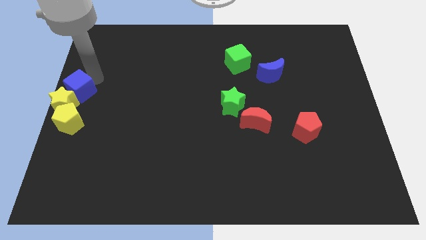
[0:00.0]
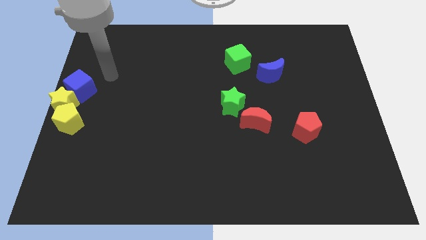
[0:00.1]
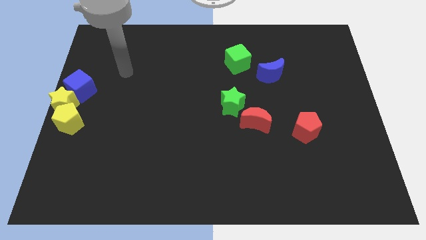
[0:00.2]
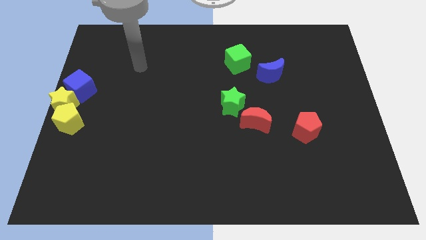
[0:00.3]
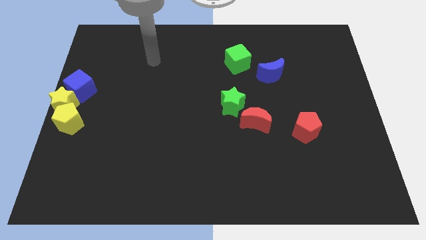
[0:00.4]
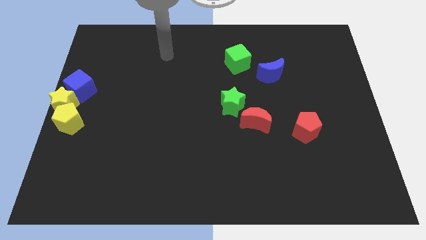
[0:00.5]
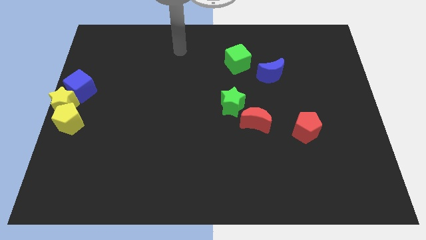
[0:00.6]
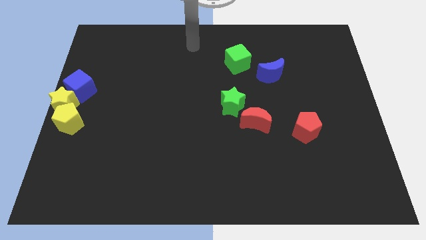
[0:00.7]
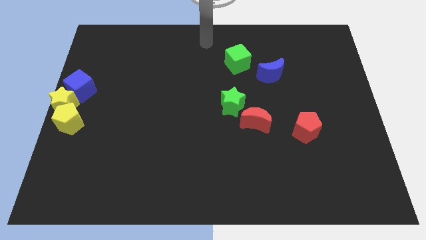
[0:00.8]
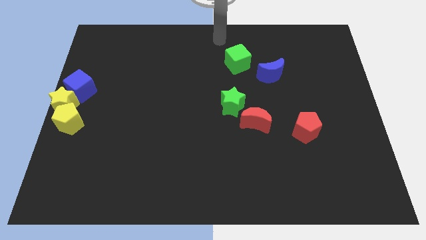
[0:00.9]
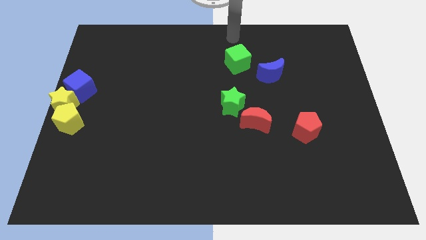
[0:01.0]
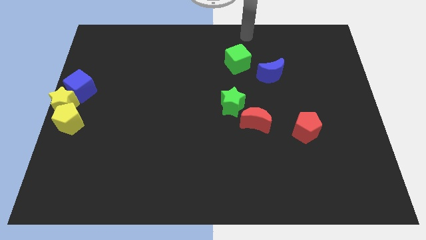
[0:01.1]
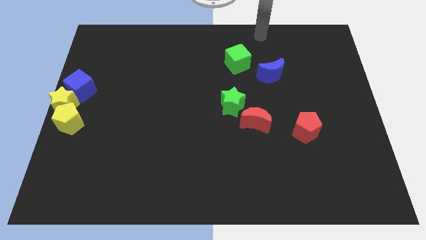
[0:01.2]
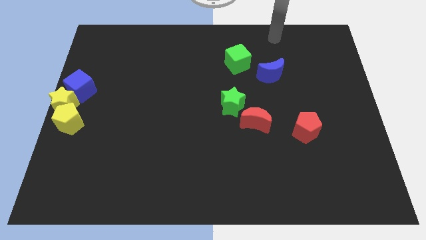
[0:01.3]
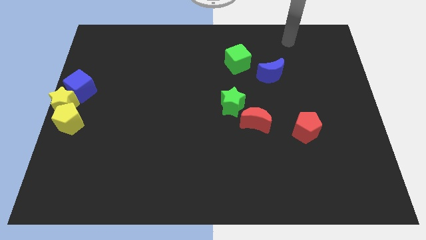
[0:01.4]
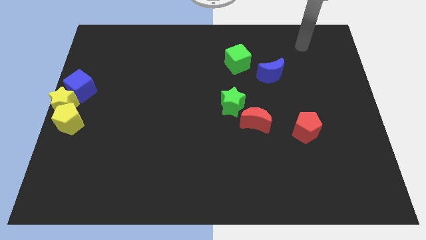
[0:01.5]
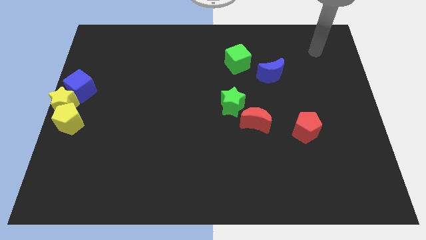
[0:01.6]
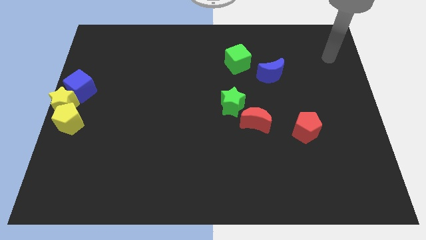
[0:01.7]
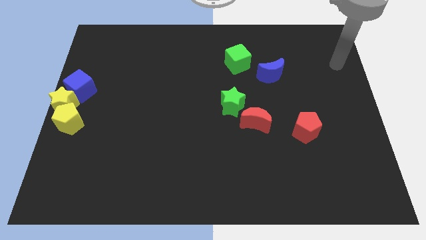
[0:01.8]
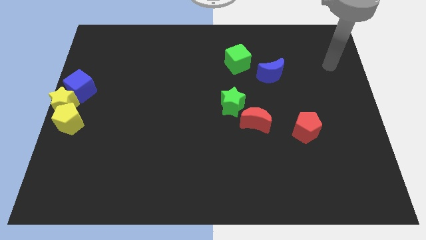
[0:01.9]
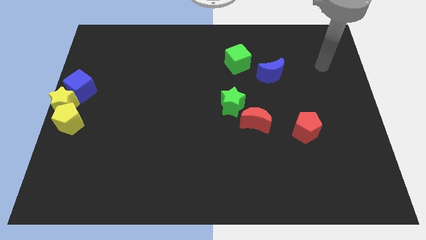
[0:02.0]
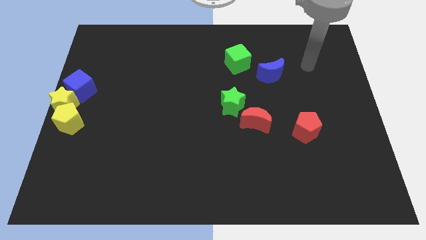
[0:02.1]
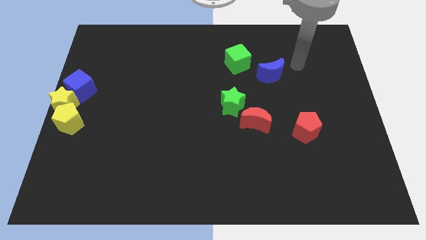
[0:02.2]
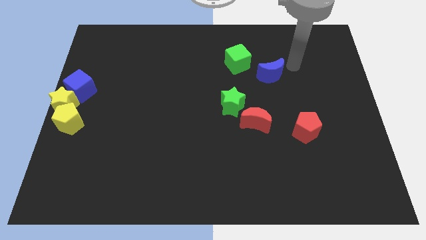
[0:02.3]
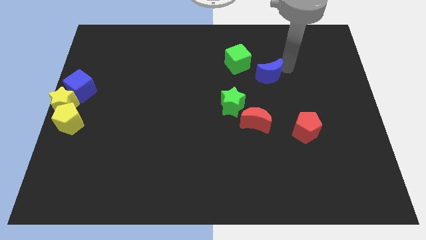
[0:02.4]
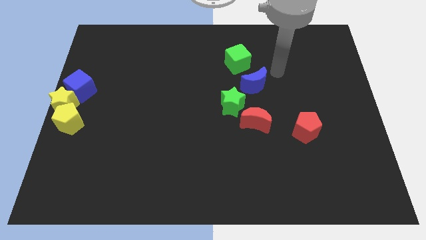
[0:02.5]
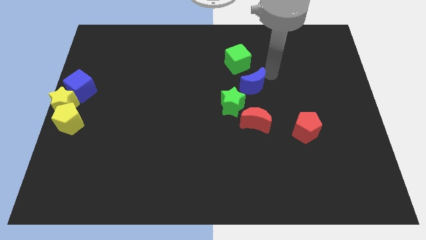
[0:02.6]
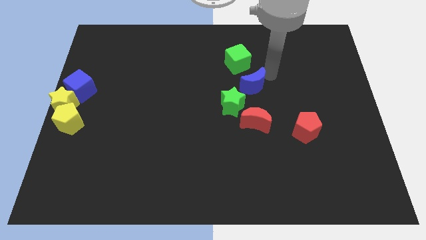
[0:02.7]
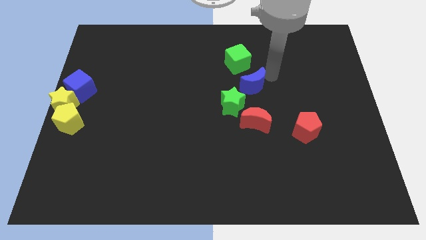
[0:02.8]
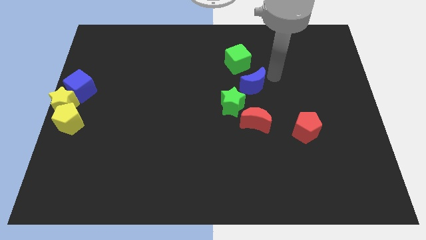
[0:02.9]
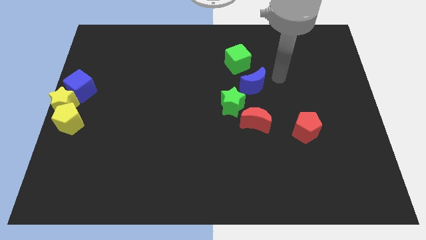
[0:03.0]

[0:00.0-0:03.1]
slide the blue moon slightly towards the green star

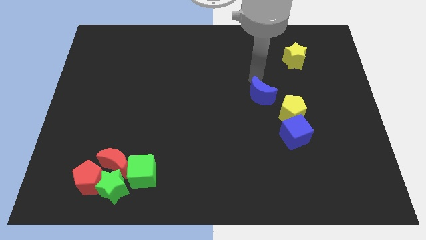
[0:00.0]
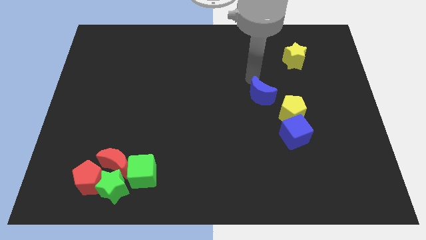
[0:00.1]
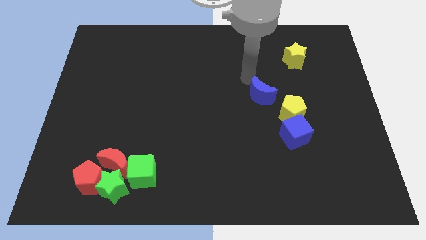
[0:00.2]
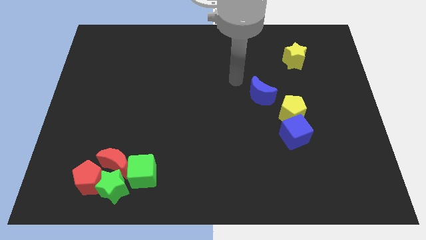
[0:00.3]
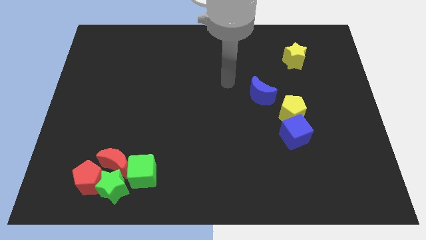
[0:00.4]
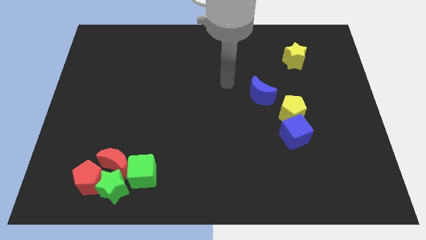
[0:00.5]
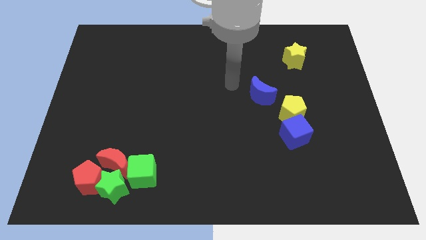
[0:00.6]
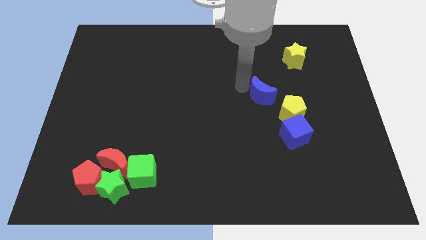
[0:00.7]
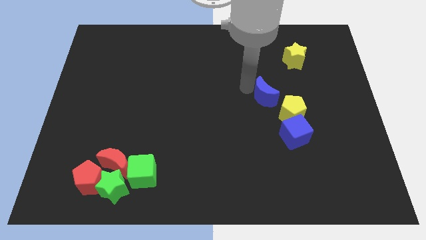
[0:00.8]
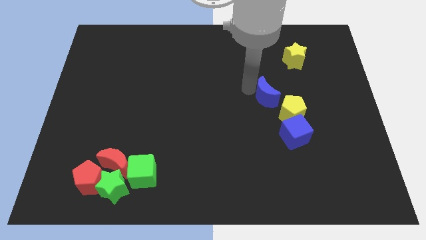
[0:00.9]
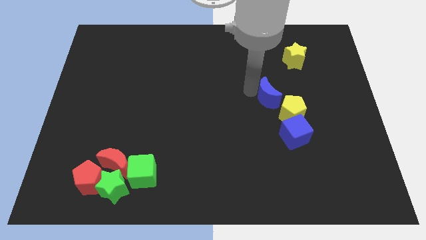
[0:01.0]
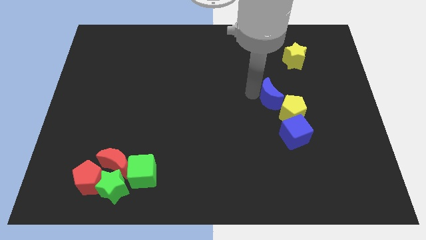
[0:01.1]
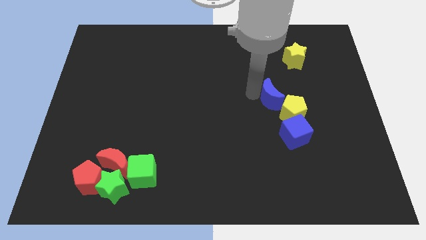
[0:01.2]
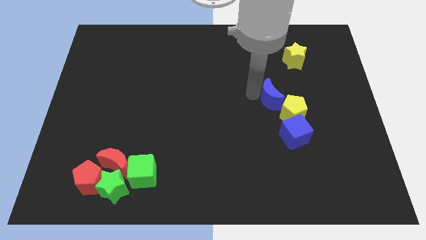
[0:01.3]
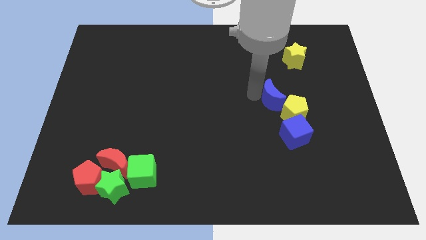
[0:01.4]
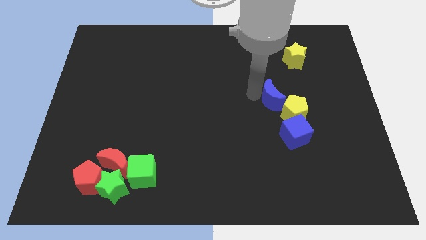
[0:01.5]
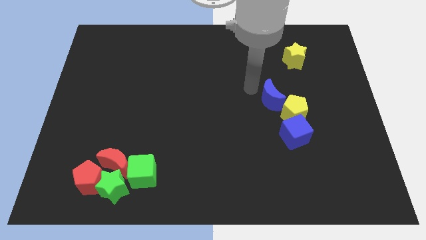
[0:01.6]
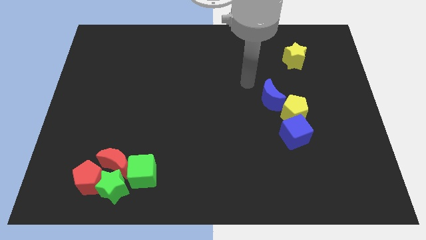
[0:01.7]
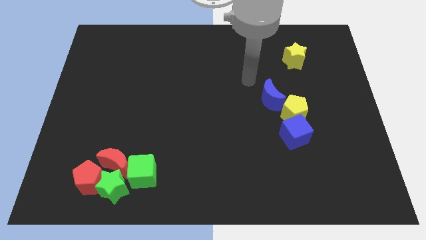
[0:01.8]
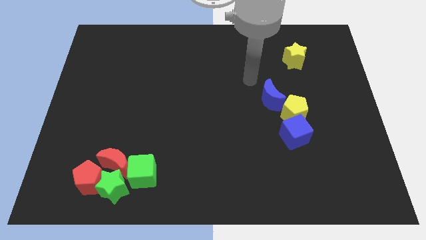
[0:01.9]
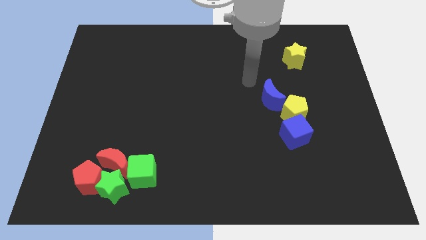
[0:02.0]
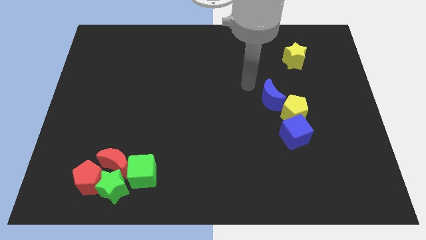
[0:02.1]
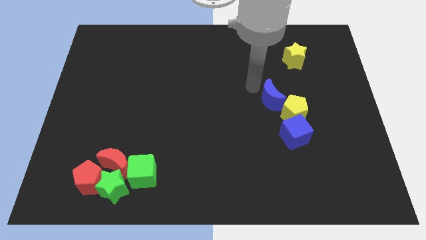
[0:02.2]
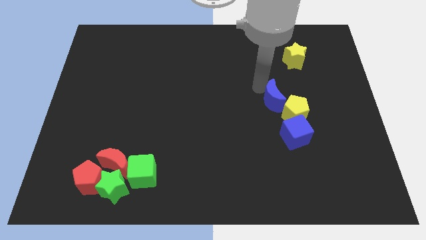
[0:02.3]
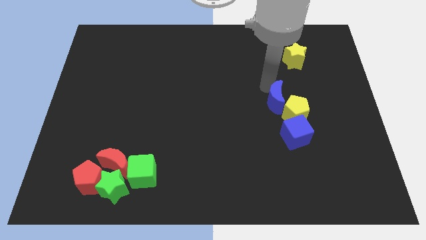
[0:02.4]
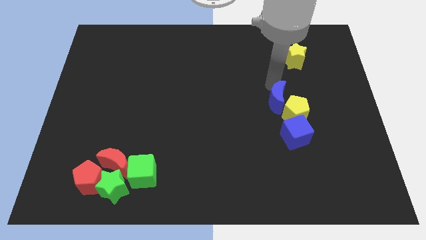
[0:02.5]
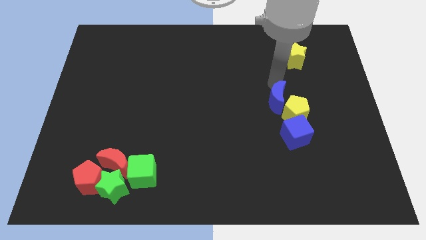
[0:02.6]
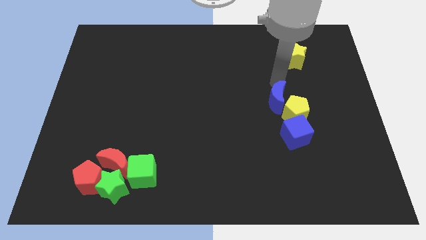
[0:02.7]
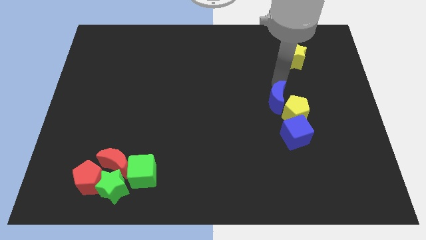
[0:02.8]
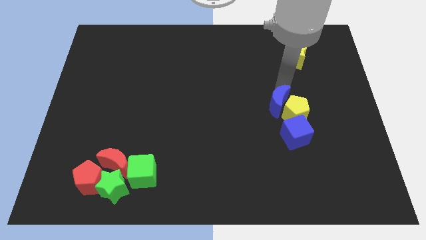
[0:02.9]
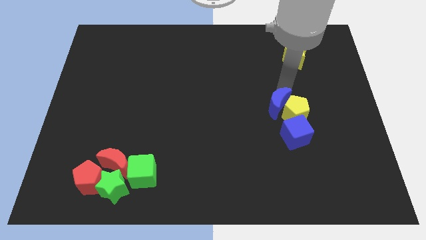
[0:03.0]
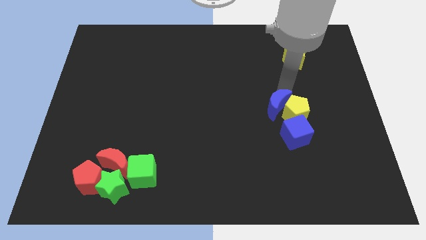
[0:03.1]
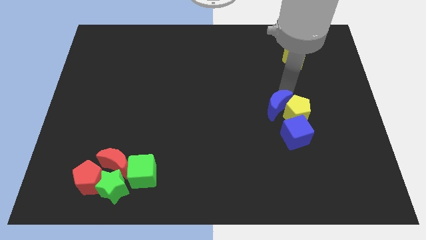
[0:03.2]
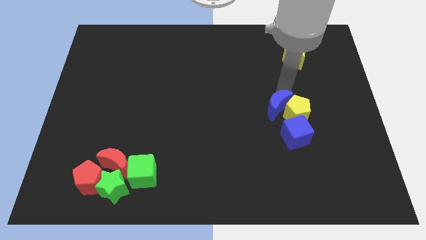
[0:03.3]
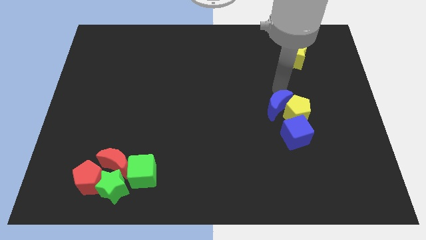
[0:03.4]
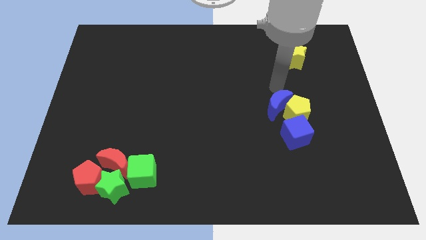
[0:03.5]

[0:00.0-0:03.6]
push the blue moon into the yellow pentagon

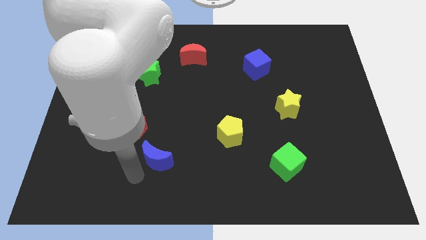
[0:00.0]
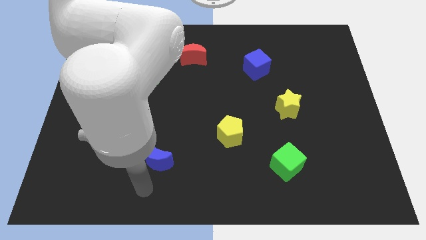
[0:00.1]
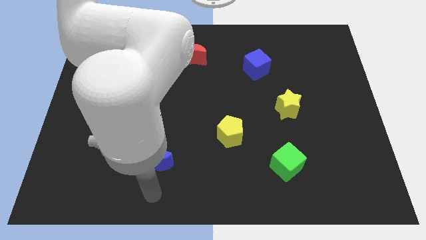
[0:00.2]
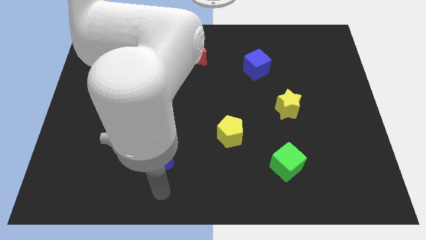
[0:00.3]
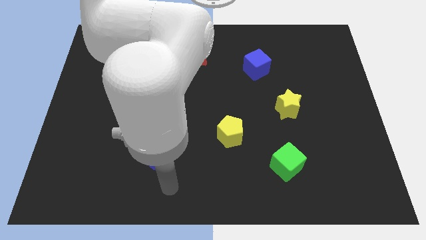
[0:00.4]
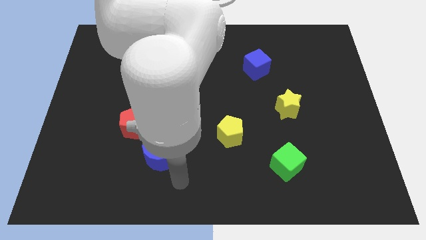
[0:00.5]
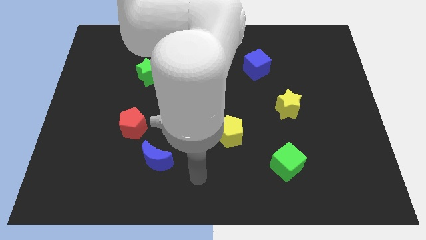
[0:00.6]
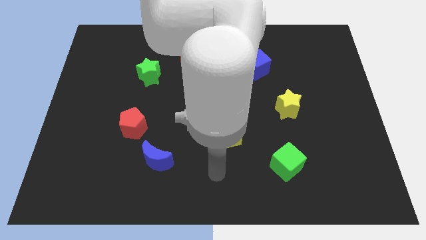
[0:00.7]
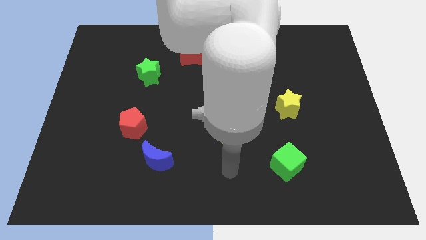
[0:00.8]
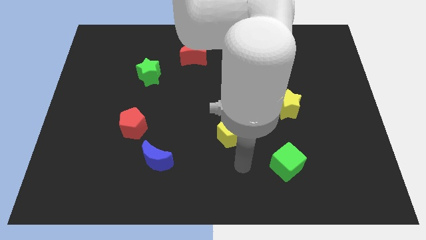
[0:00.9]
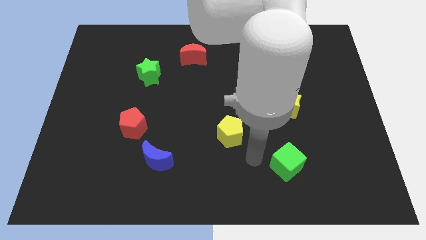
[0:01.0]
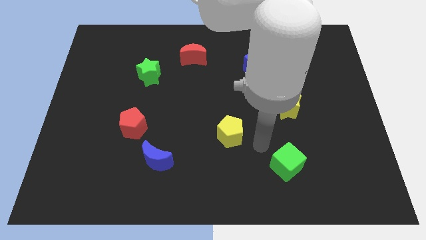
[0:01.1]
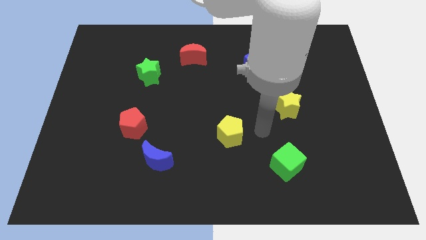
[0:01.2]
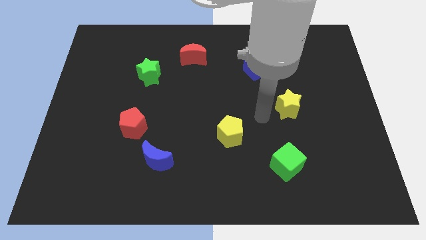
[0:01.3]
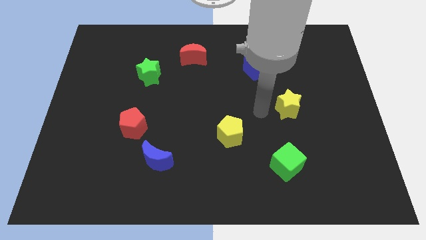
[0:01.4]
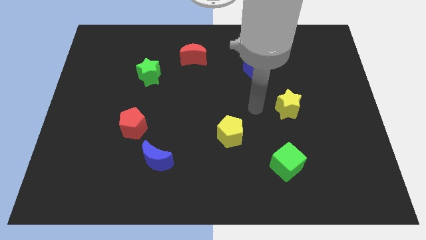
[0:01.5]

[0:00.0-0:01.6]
move your arm away from the blue semicircle

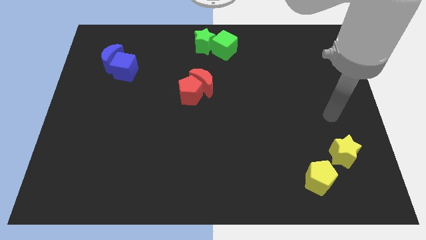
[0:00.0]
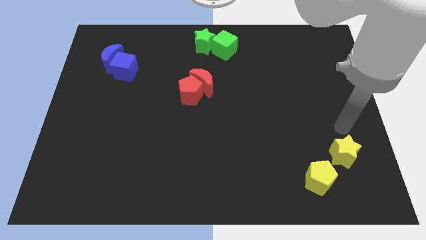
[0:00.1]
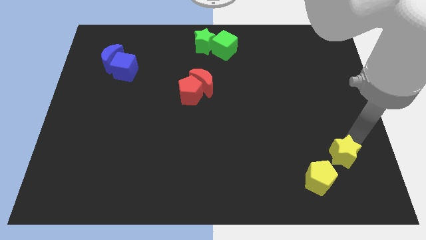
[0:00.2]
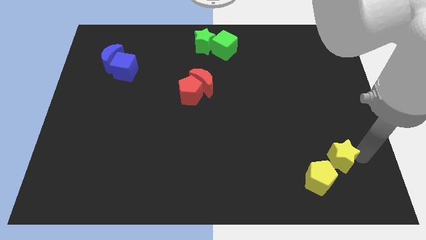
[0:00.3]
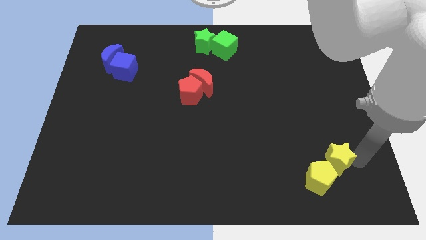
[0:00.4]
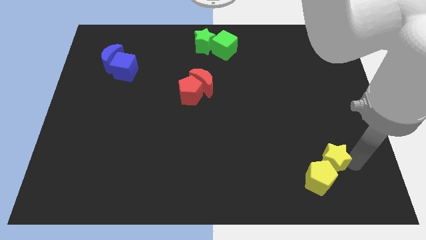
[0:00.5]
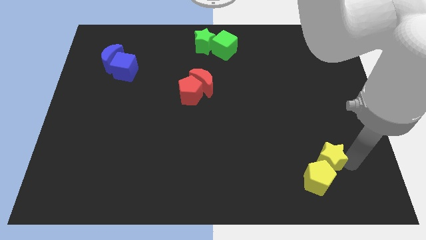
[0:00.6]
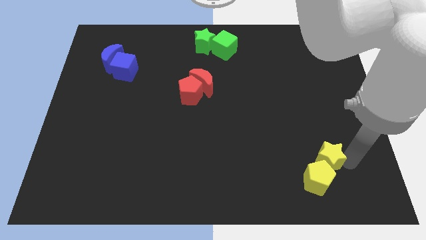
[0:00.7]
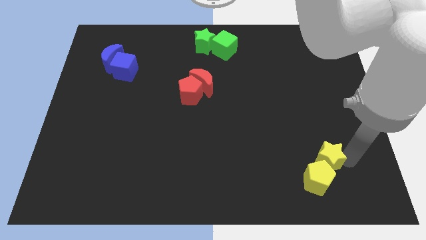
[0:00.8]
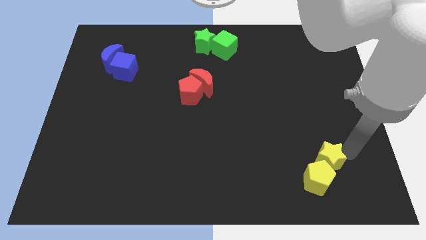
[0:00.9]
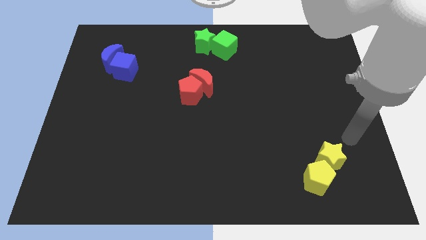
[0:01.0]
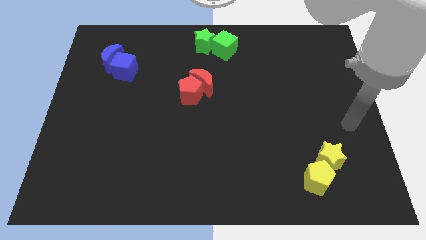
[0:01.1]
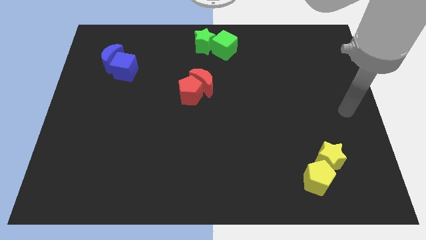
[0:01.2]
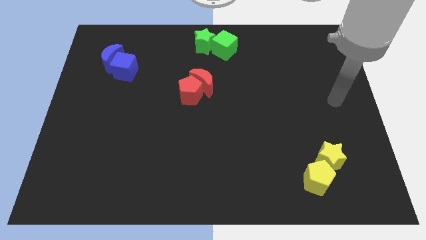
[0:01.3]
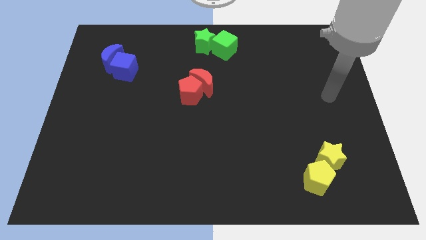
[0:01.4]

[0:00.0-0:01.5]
push the yellow star into the yellow pentagon
